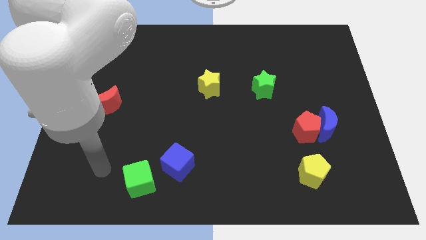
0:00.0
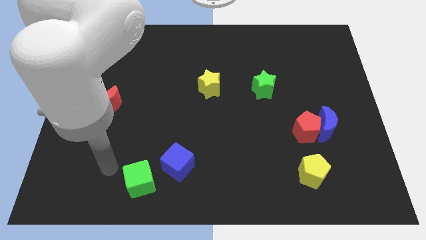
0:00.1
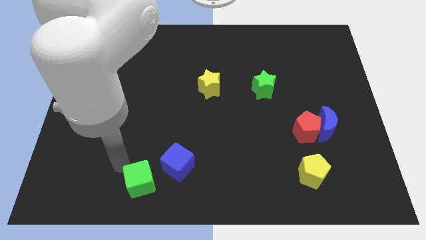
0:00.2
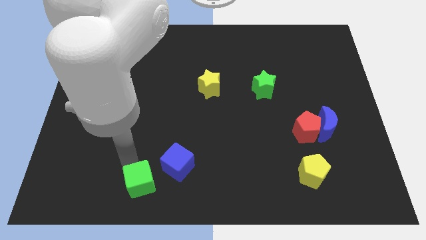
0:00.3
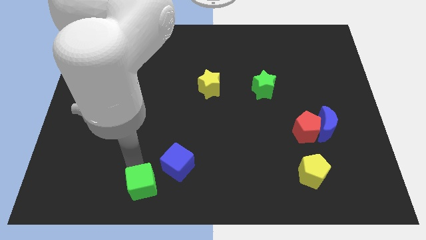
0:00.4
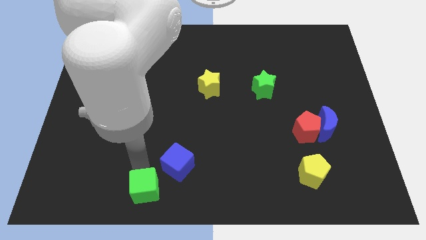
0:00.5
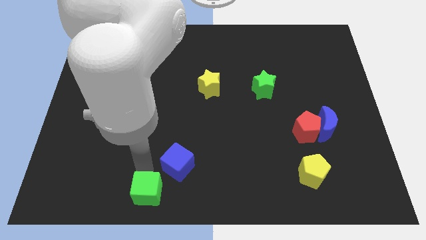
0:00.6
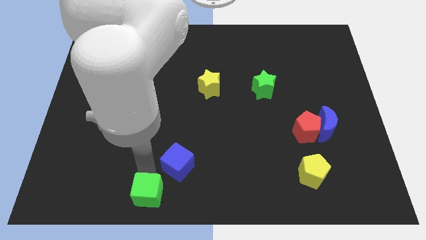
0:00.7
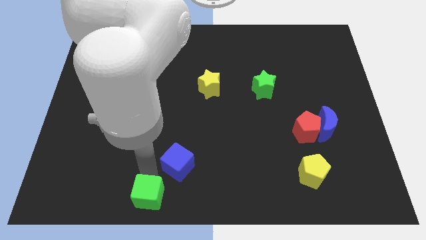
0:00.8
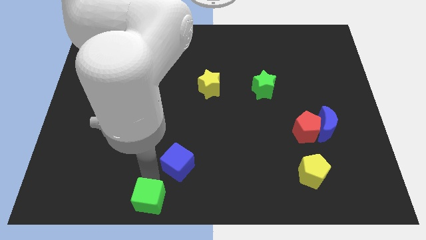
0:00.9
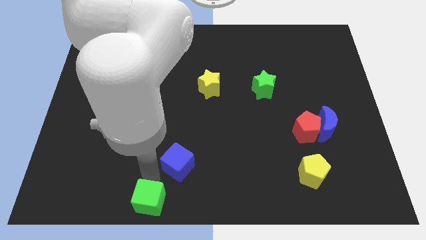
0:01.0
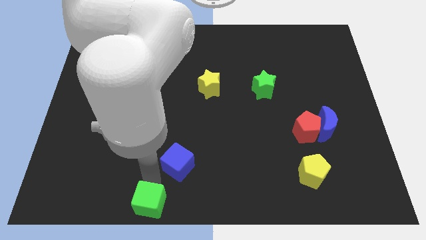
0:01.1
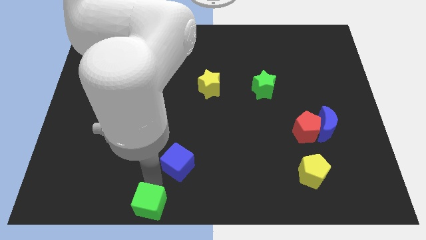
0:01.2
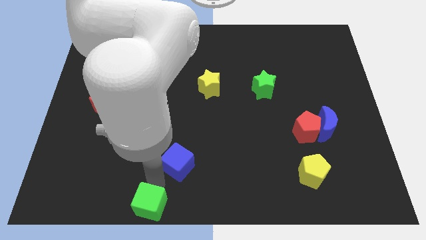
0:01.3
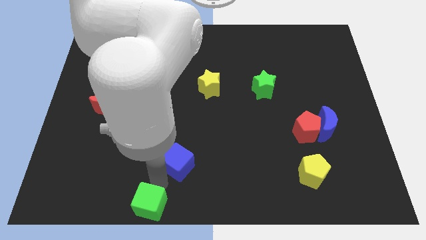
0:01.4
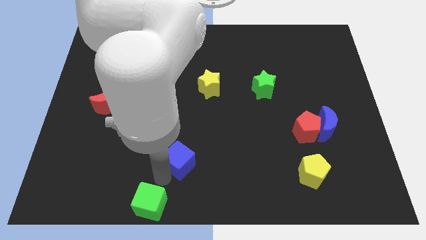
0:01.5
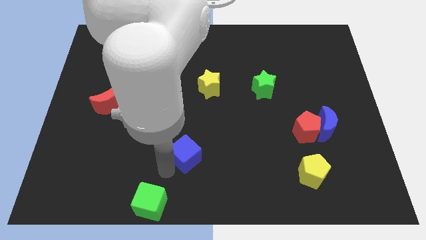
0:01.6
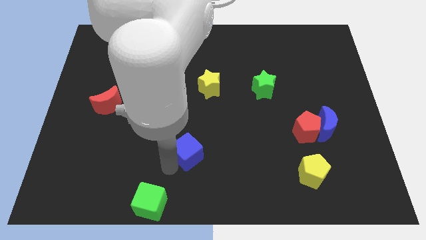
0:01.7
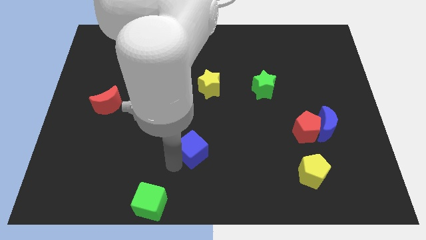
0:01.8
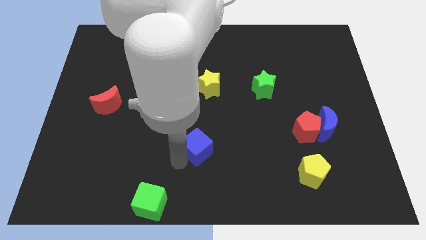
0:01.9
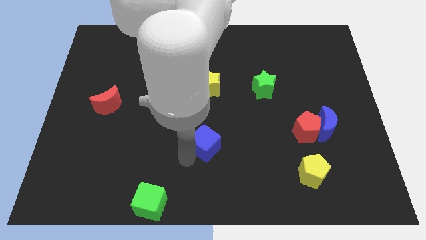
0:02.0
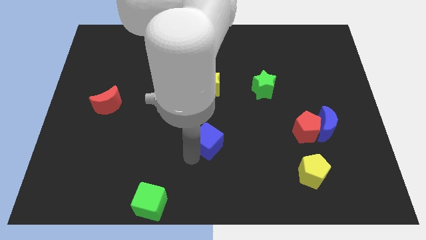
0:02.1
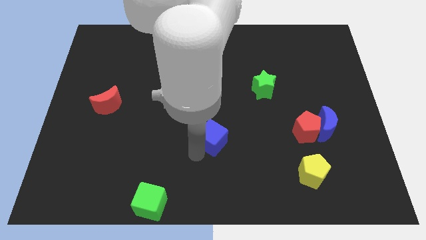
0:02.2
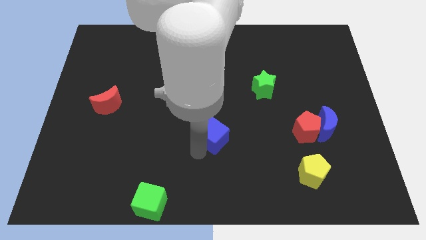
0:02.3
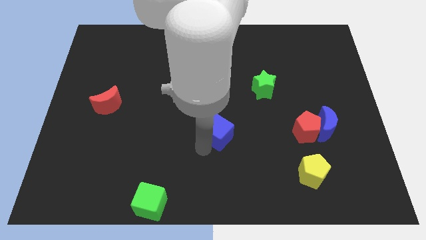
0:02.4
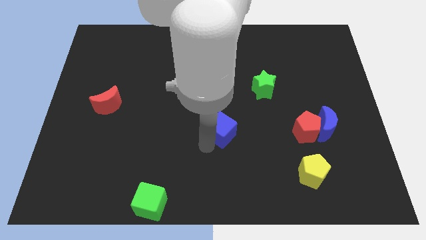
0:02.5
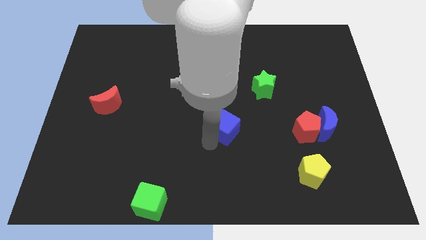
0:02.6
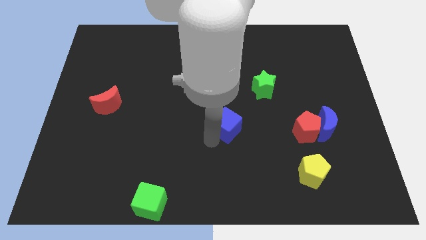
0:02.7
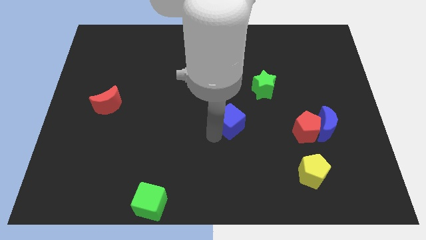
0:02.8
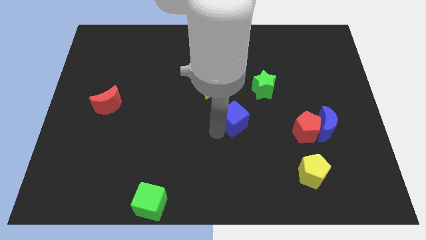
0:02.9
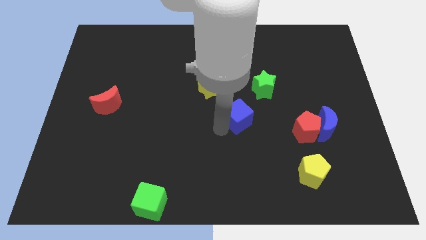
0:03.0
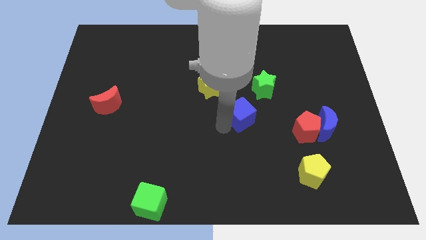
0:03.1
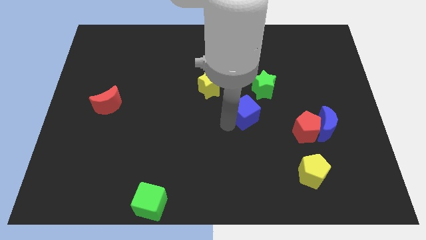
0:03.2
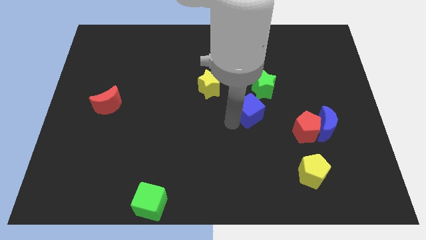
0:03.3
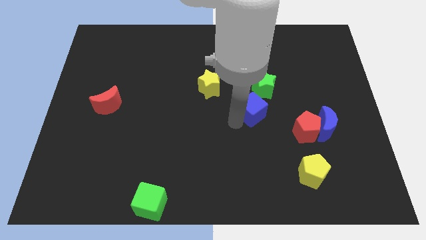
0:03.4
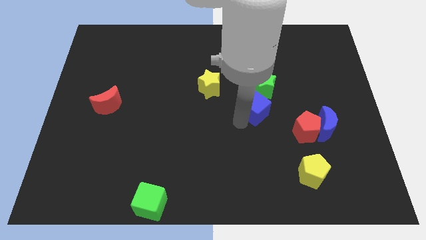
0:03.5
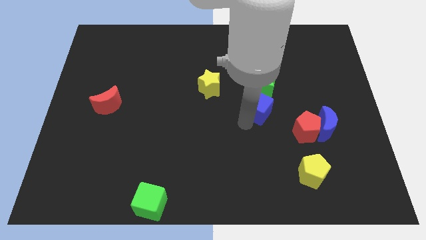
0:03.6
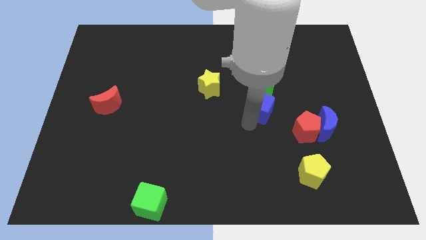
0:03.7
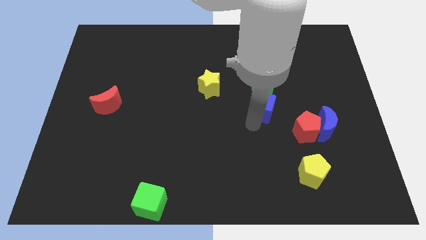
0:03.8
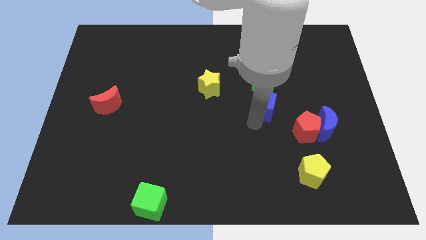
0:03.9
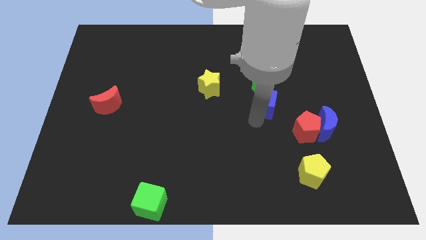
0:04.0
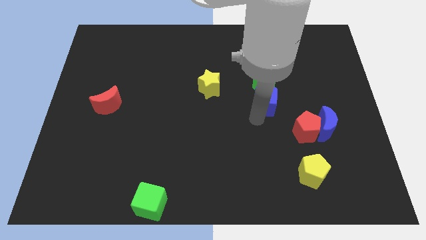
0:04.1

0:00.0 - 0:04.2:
push the blue cube close to the green star

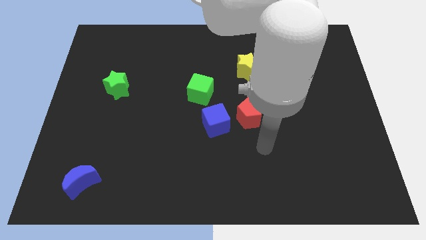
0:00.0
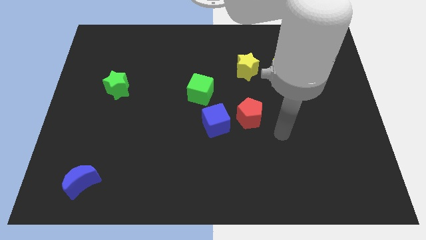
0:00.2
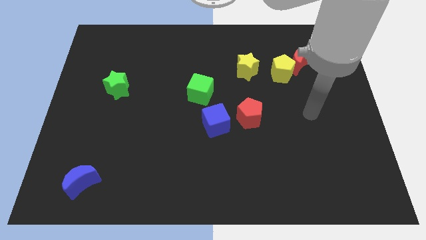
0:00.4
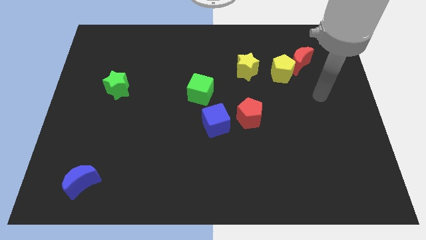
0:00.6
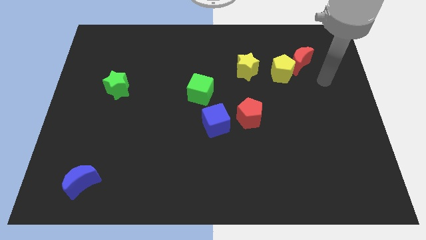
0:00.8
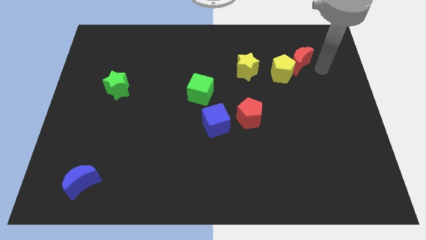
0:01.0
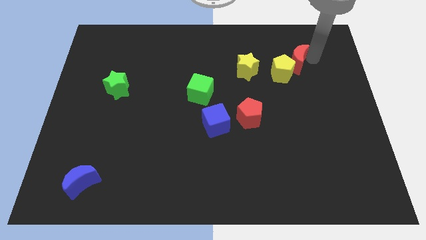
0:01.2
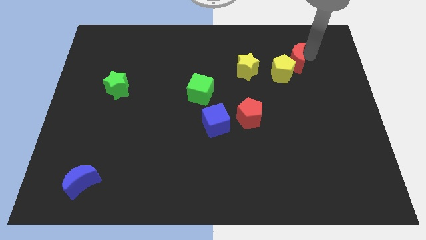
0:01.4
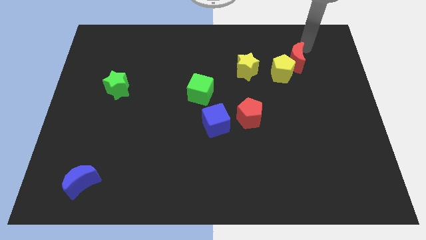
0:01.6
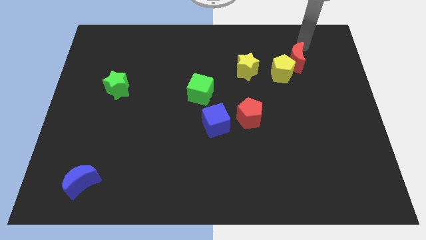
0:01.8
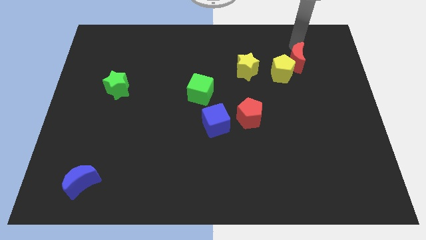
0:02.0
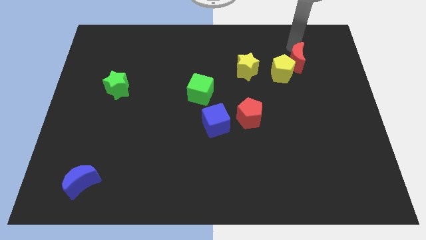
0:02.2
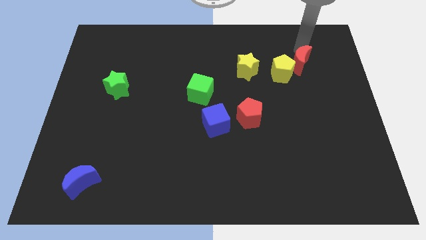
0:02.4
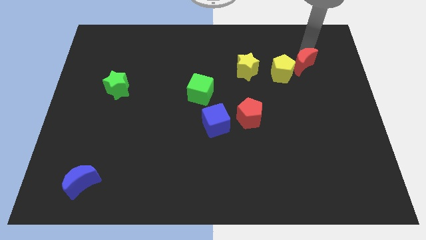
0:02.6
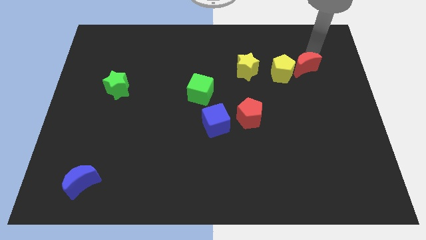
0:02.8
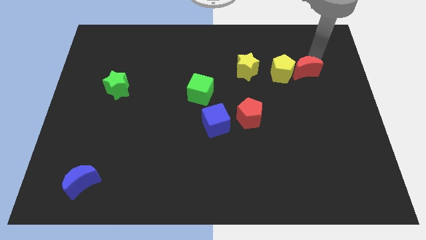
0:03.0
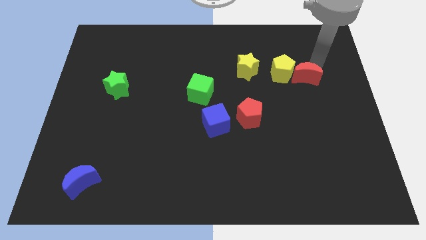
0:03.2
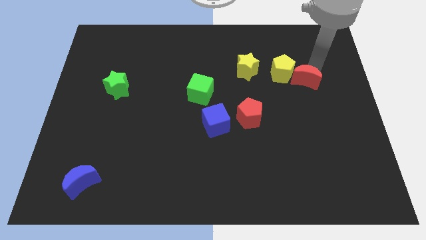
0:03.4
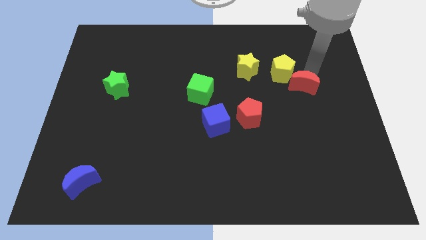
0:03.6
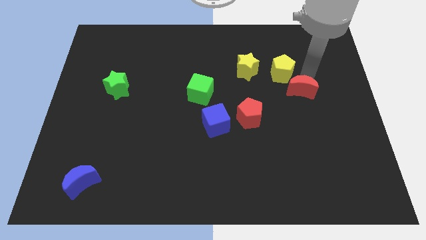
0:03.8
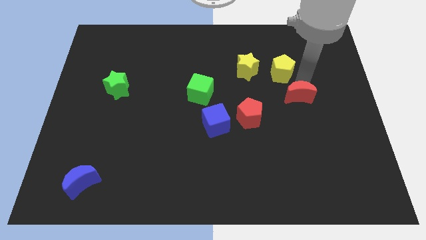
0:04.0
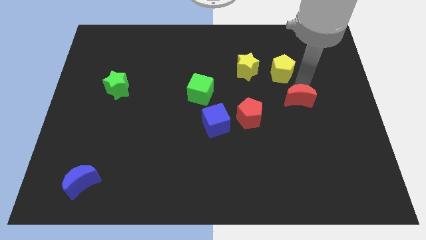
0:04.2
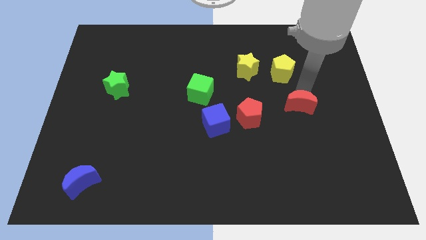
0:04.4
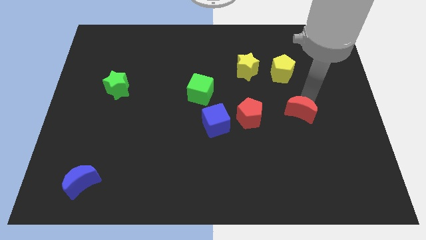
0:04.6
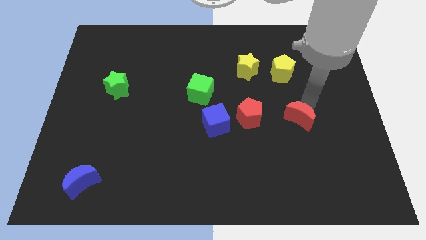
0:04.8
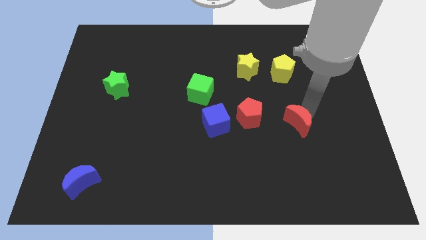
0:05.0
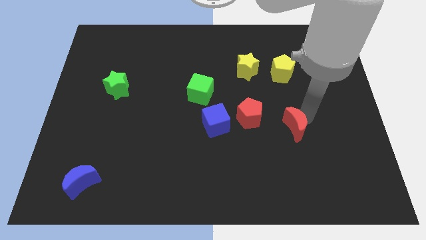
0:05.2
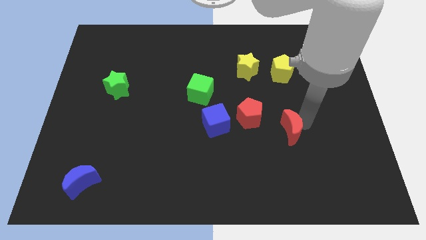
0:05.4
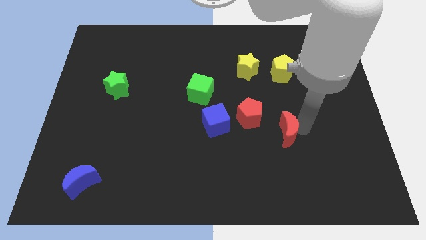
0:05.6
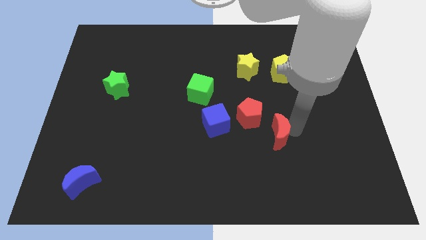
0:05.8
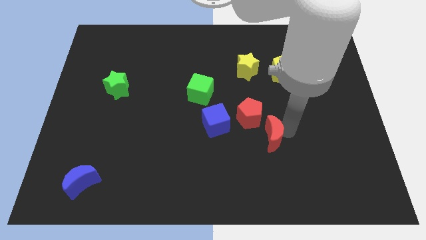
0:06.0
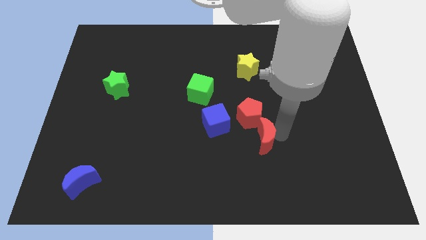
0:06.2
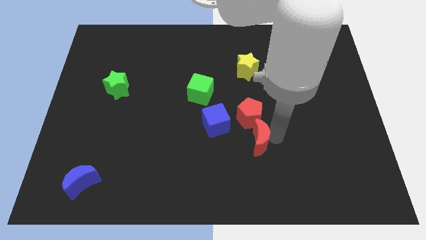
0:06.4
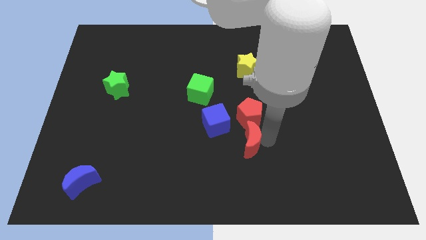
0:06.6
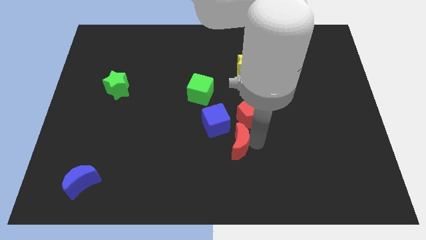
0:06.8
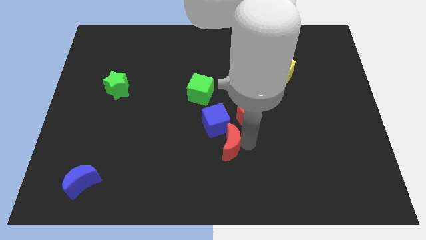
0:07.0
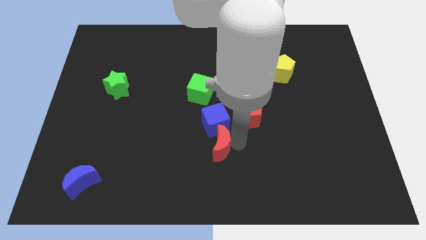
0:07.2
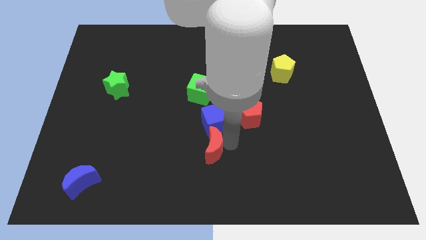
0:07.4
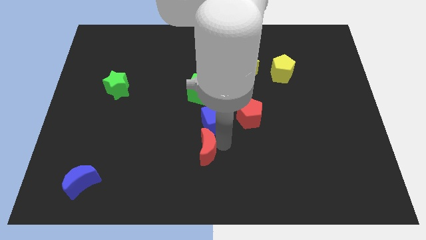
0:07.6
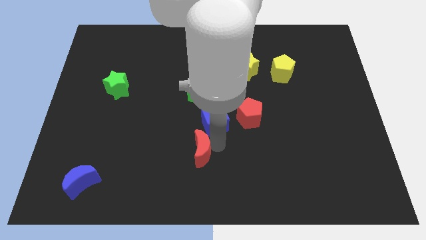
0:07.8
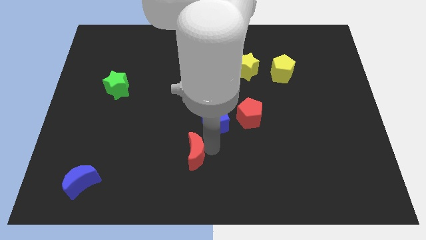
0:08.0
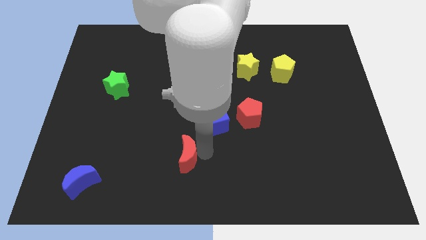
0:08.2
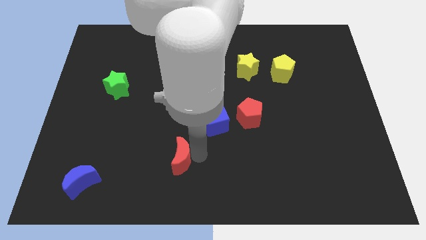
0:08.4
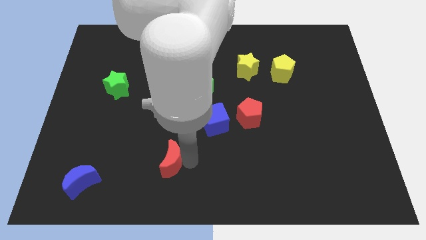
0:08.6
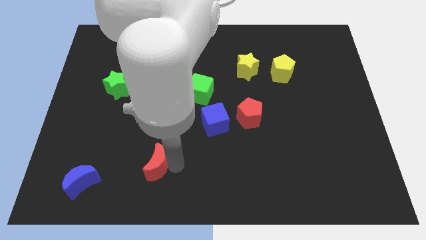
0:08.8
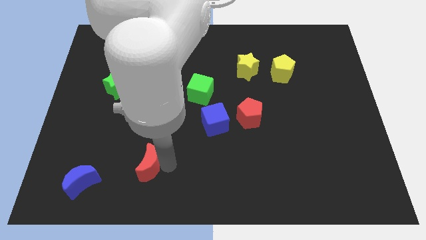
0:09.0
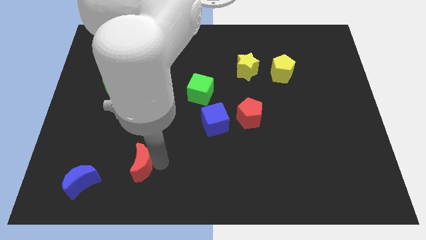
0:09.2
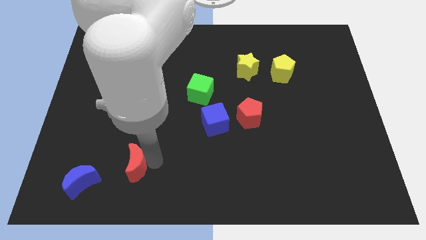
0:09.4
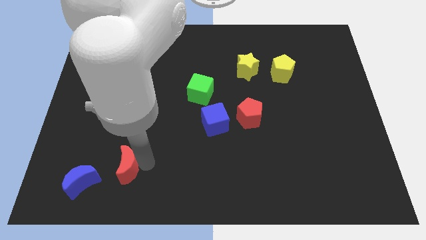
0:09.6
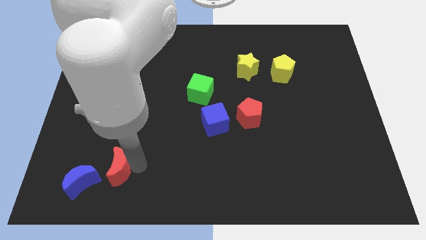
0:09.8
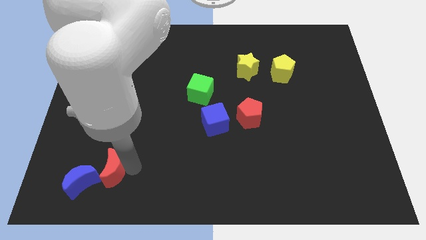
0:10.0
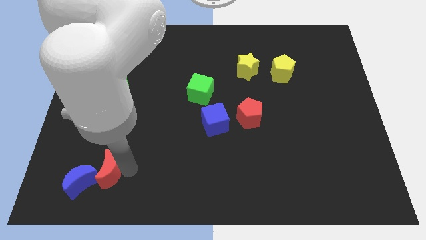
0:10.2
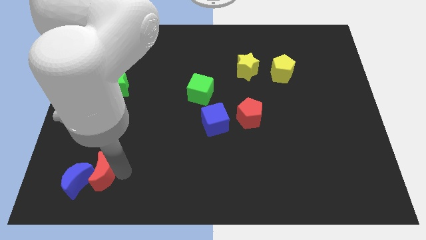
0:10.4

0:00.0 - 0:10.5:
push the red moon towards the blue moon
